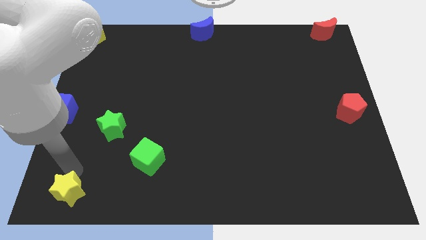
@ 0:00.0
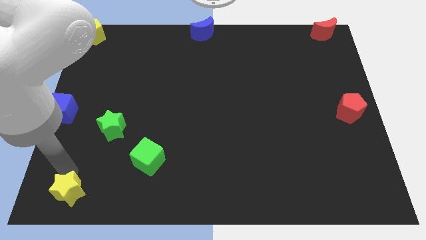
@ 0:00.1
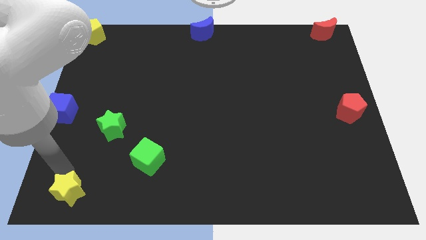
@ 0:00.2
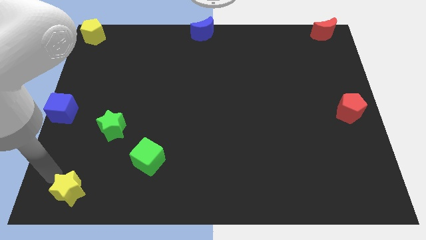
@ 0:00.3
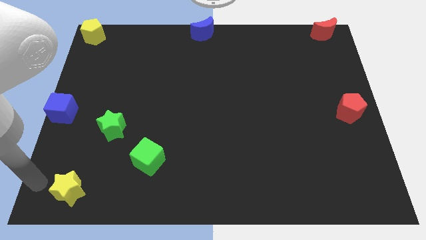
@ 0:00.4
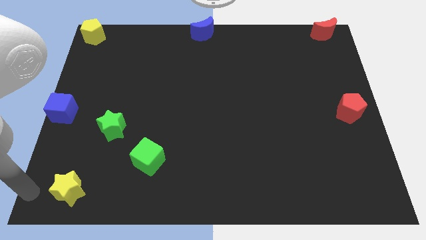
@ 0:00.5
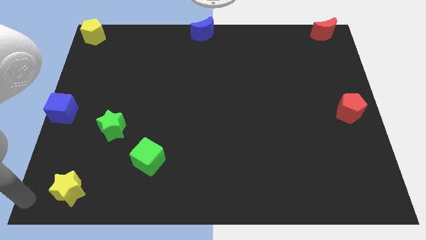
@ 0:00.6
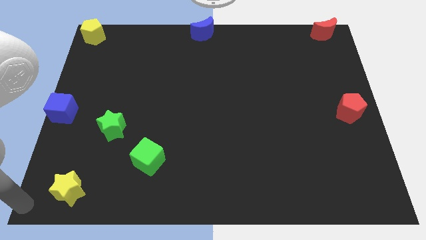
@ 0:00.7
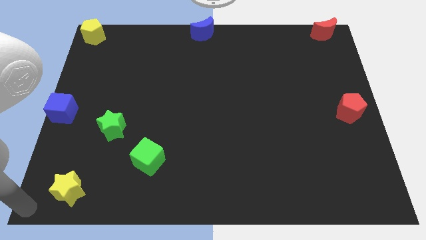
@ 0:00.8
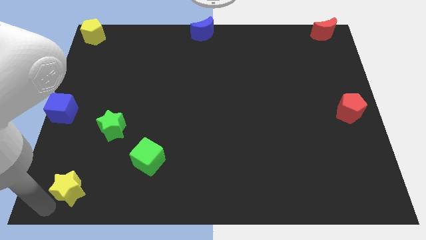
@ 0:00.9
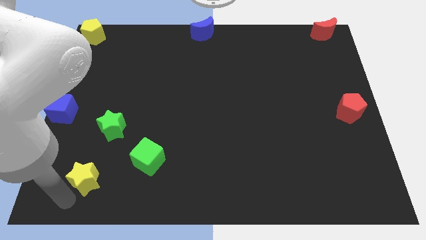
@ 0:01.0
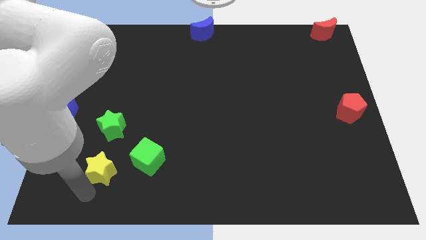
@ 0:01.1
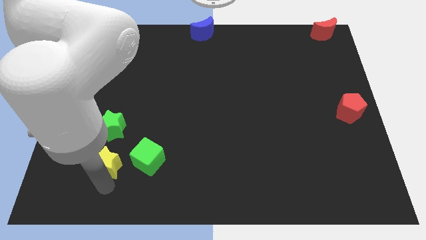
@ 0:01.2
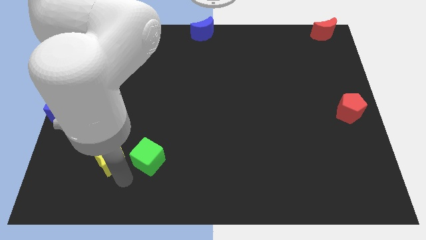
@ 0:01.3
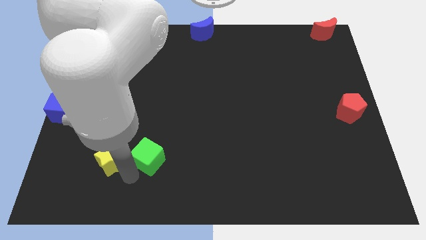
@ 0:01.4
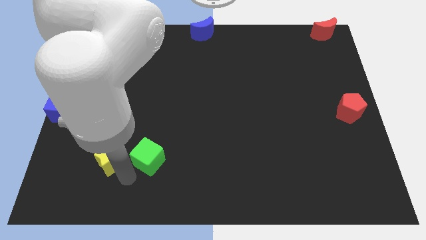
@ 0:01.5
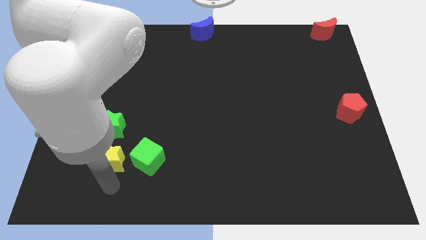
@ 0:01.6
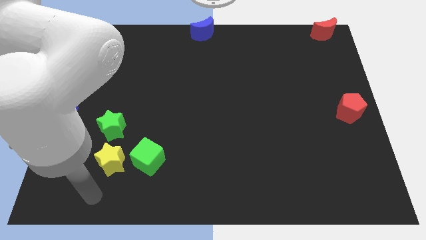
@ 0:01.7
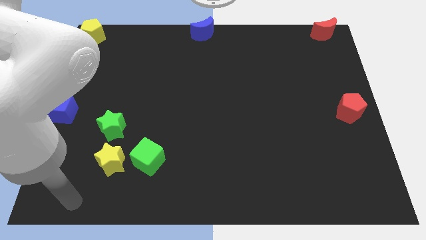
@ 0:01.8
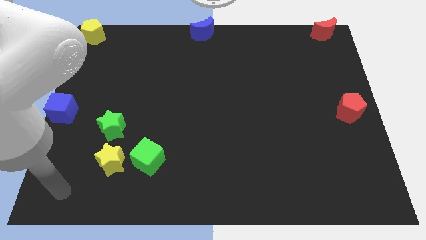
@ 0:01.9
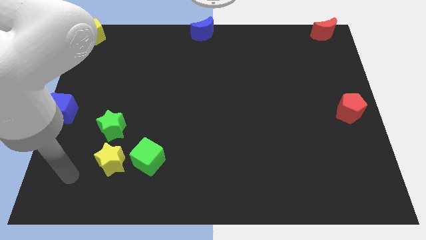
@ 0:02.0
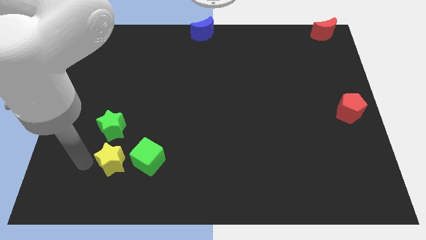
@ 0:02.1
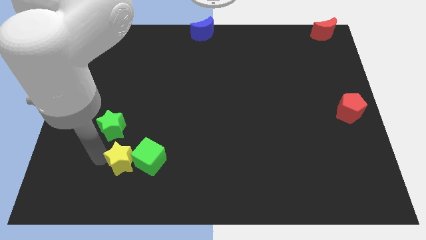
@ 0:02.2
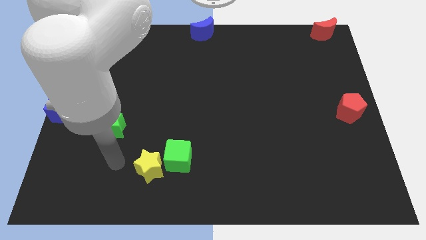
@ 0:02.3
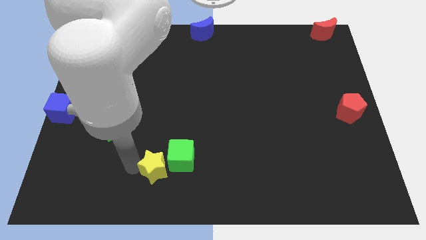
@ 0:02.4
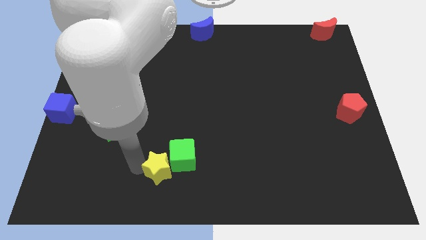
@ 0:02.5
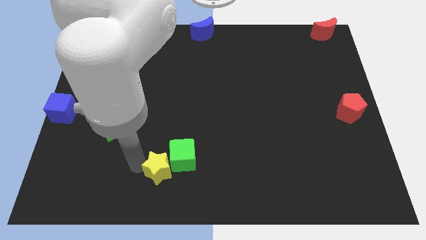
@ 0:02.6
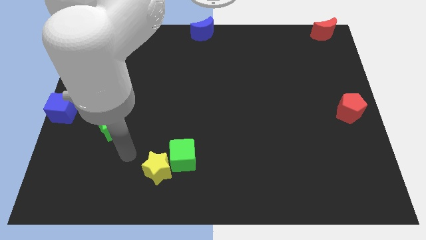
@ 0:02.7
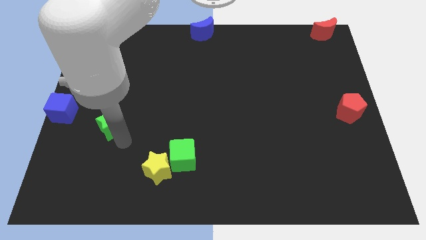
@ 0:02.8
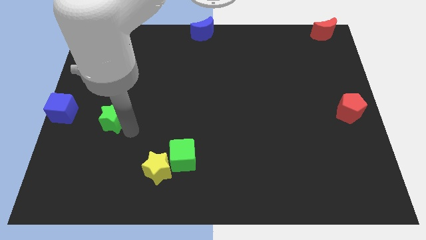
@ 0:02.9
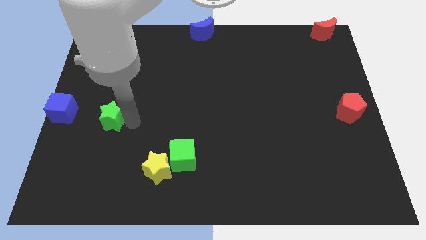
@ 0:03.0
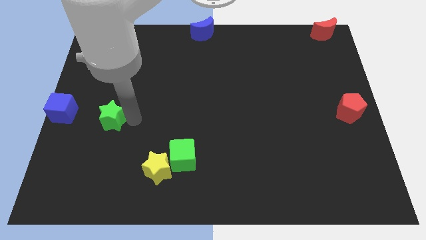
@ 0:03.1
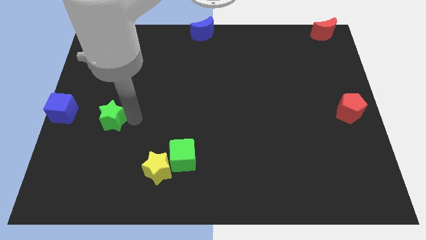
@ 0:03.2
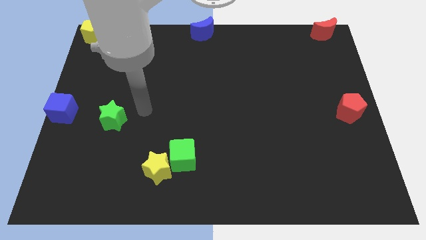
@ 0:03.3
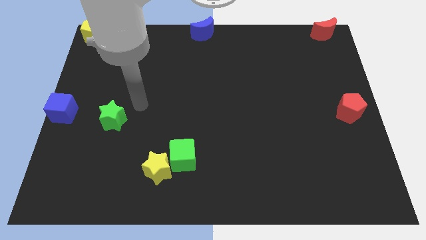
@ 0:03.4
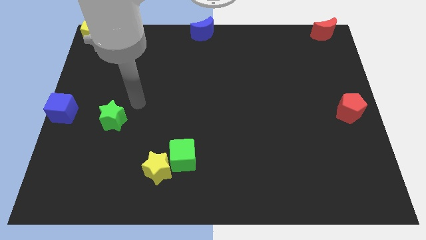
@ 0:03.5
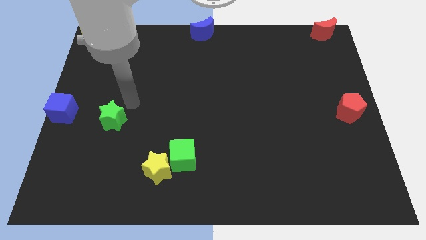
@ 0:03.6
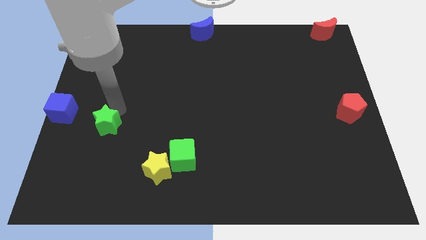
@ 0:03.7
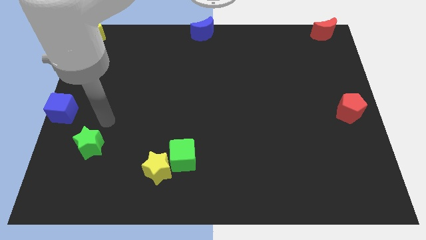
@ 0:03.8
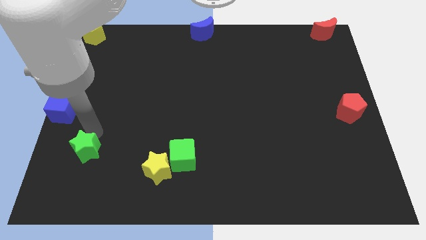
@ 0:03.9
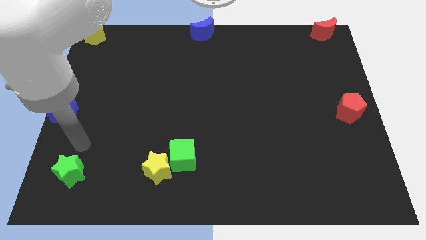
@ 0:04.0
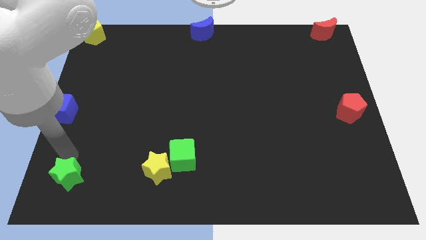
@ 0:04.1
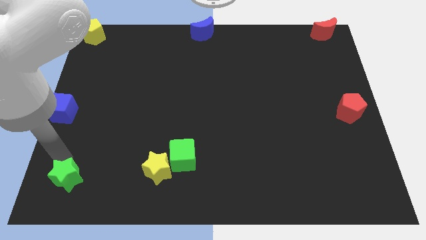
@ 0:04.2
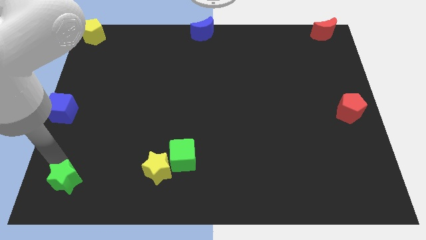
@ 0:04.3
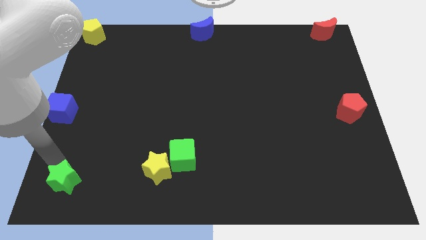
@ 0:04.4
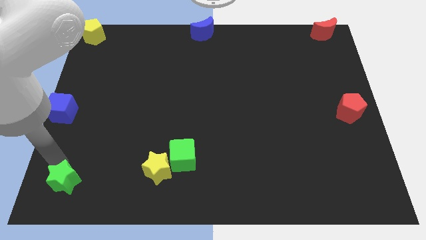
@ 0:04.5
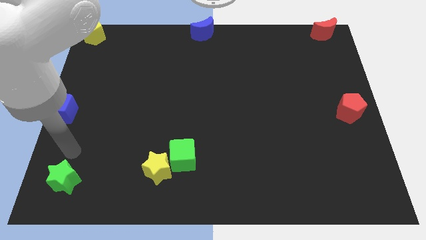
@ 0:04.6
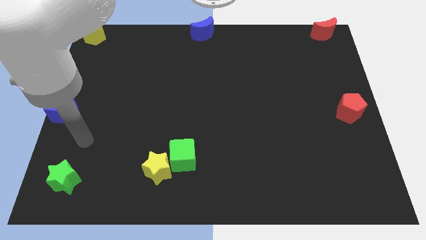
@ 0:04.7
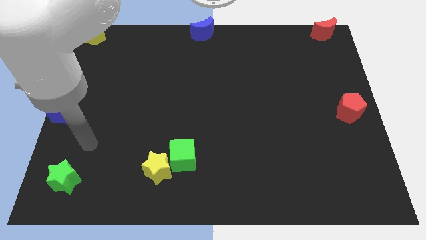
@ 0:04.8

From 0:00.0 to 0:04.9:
place the yellow star close to green cube

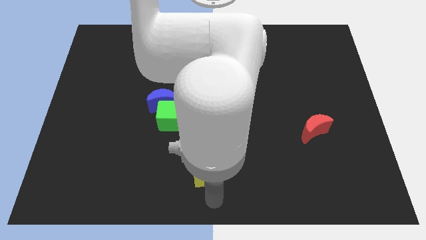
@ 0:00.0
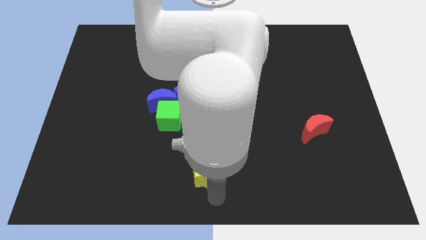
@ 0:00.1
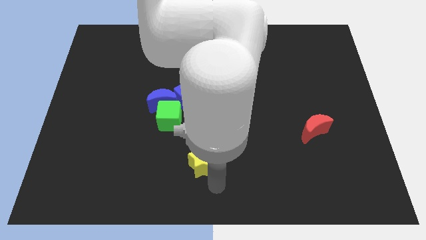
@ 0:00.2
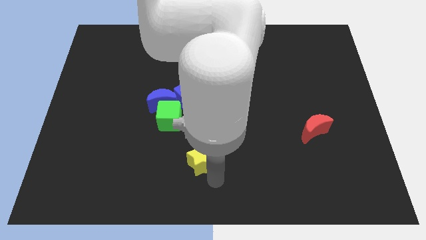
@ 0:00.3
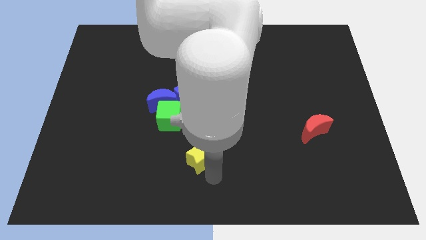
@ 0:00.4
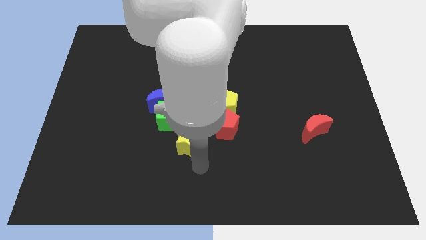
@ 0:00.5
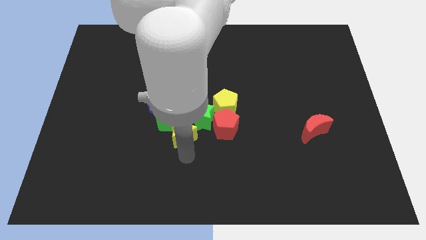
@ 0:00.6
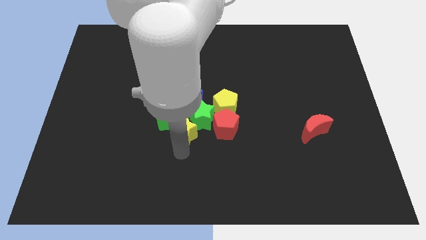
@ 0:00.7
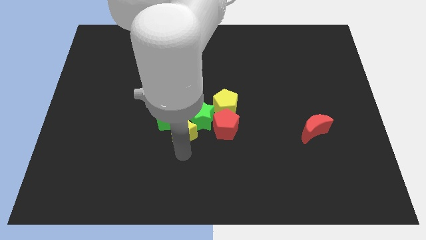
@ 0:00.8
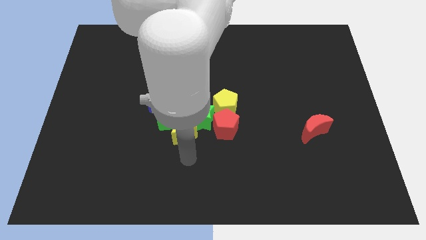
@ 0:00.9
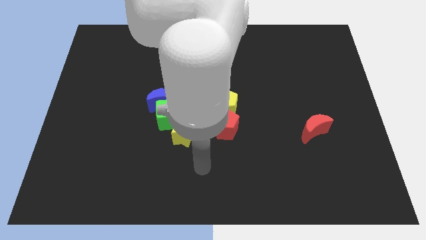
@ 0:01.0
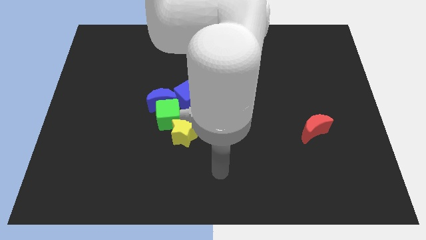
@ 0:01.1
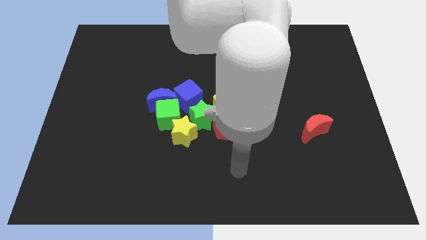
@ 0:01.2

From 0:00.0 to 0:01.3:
place yellow star below the green blocks

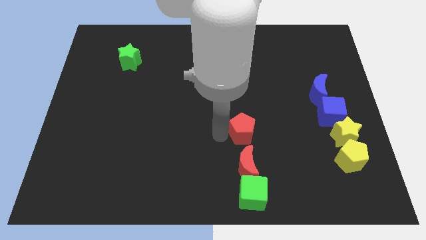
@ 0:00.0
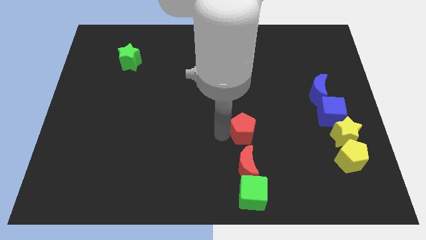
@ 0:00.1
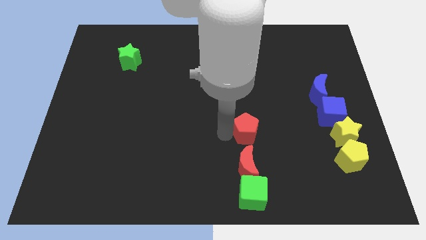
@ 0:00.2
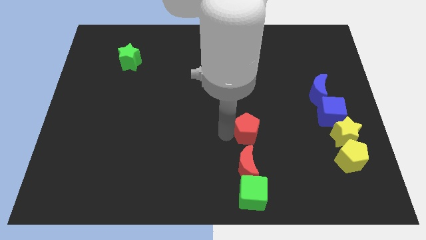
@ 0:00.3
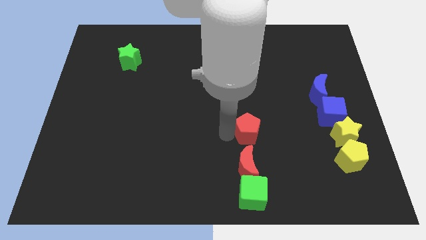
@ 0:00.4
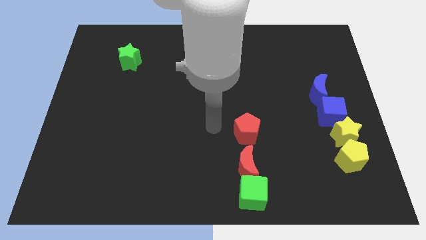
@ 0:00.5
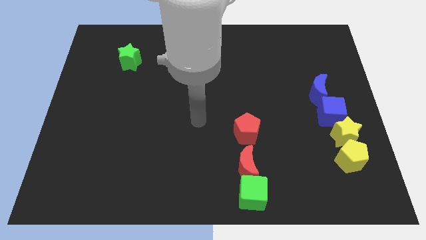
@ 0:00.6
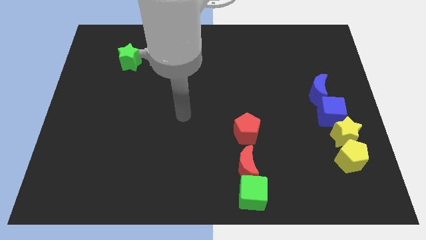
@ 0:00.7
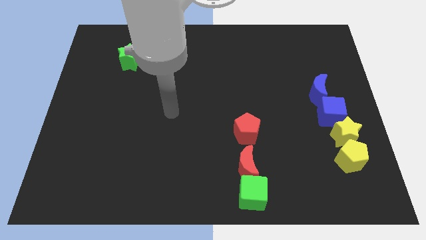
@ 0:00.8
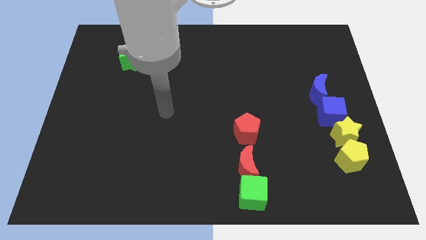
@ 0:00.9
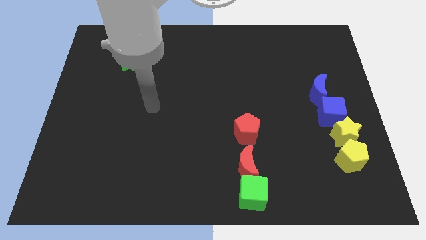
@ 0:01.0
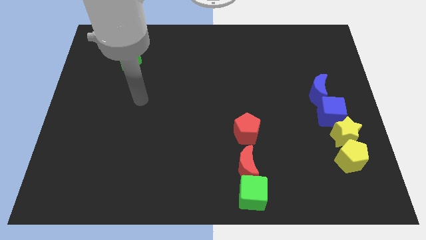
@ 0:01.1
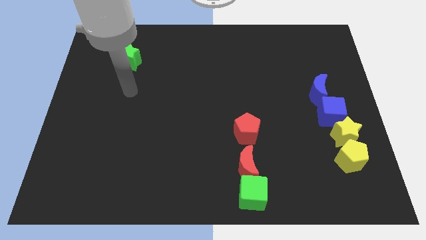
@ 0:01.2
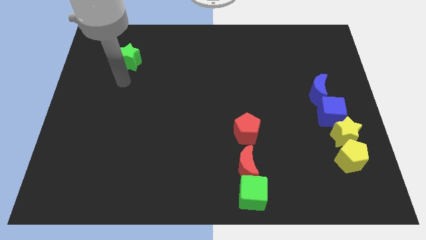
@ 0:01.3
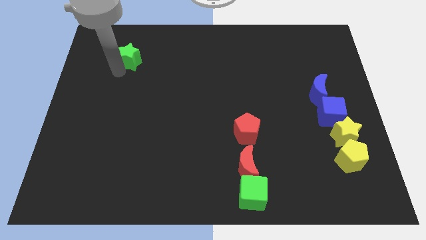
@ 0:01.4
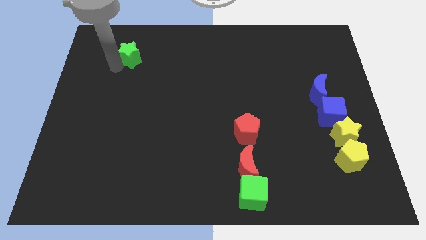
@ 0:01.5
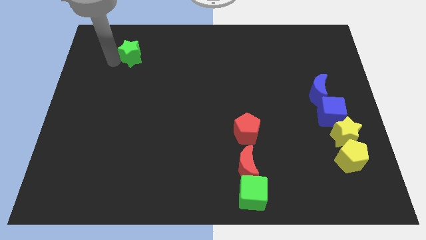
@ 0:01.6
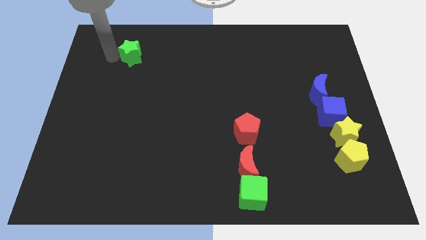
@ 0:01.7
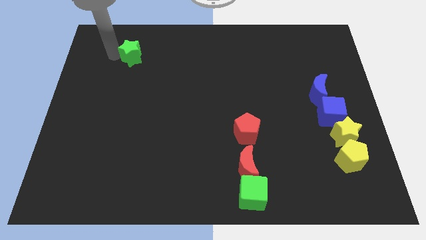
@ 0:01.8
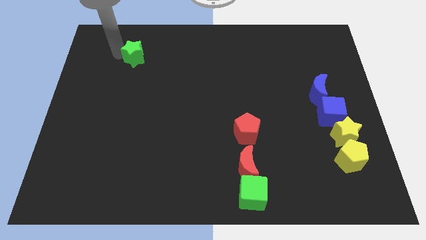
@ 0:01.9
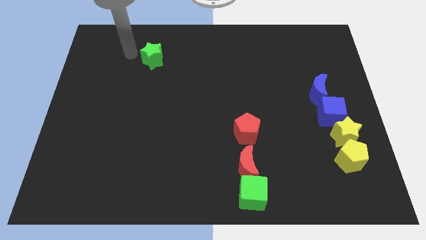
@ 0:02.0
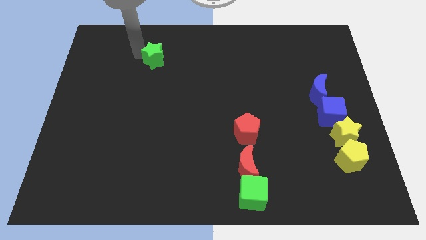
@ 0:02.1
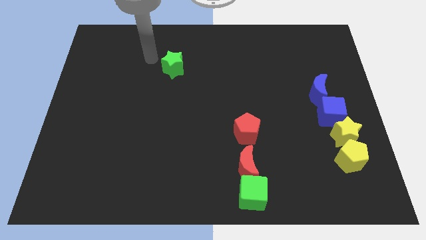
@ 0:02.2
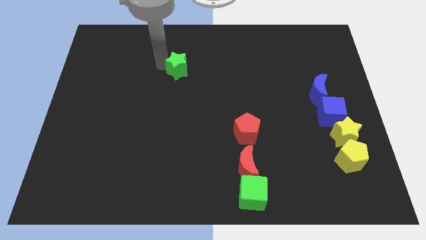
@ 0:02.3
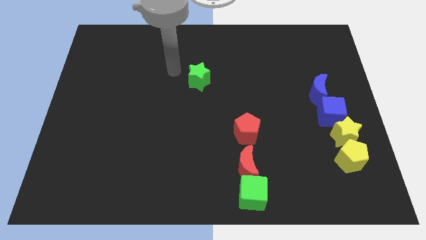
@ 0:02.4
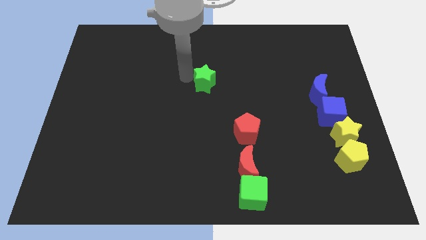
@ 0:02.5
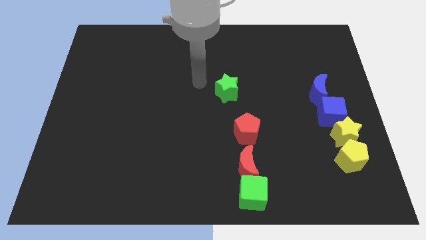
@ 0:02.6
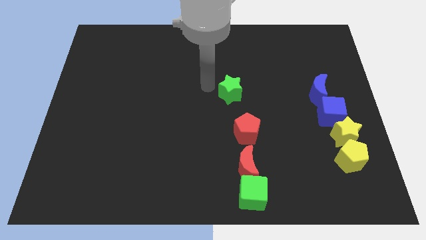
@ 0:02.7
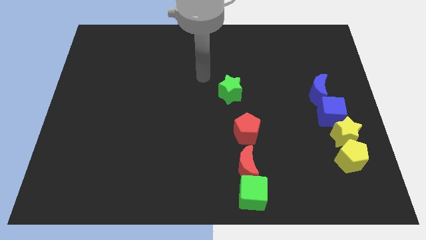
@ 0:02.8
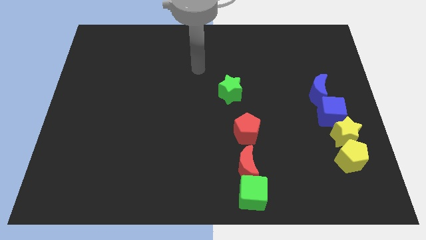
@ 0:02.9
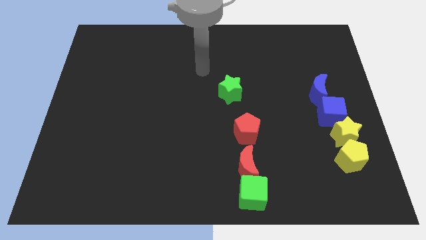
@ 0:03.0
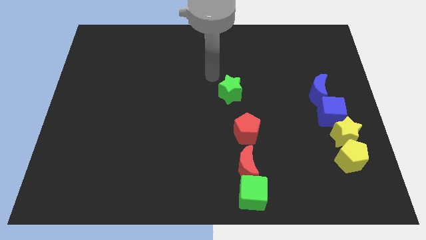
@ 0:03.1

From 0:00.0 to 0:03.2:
push the green star towards the center
